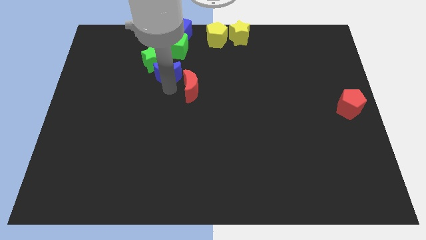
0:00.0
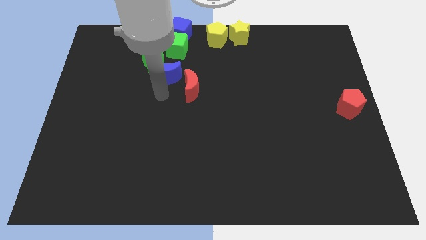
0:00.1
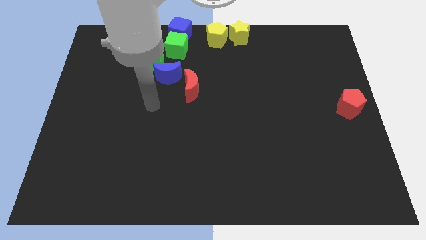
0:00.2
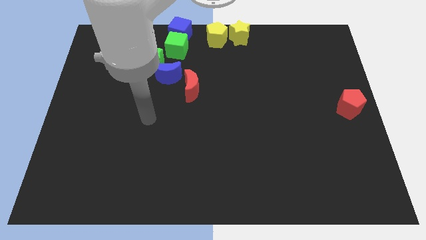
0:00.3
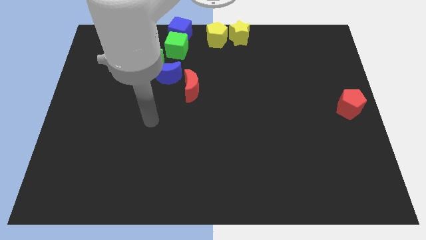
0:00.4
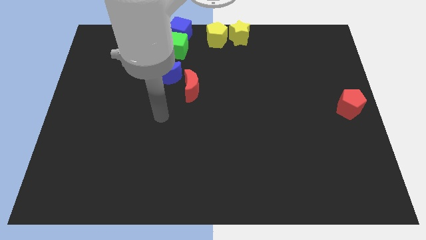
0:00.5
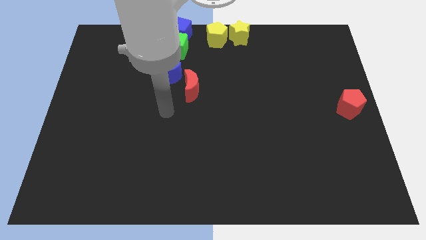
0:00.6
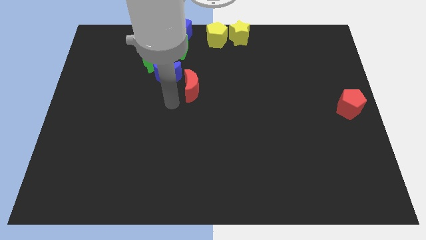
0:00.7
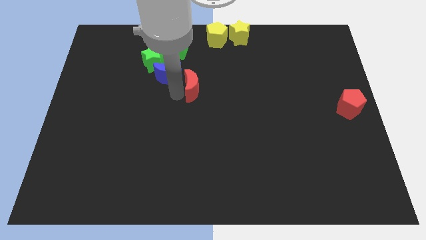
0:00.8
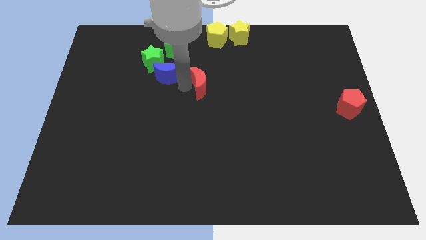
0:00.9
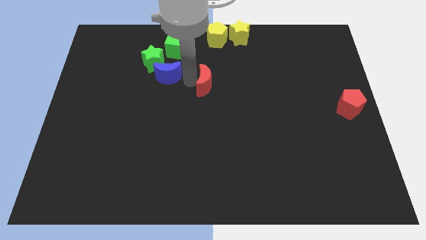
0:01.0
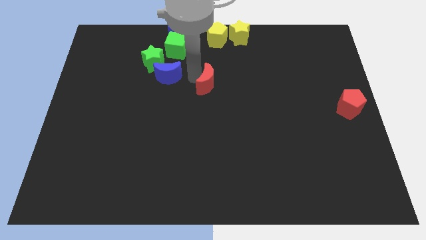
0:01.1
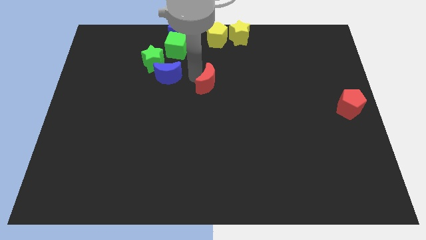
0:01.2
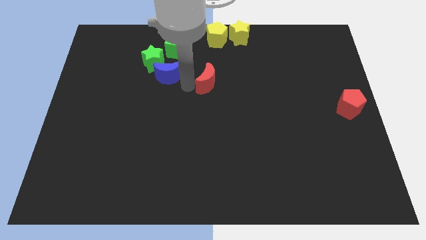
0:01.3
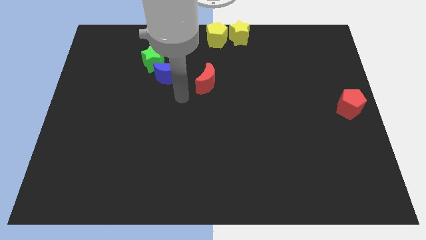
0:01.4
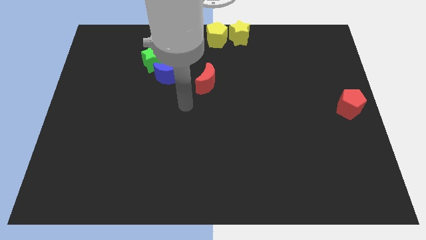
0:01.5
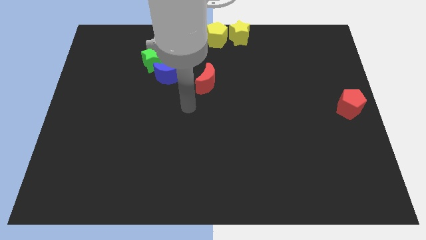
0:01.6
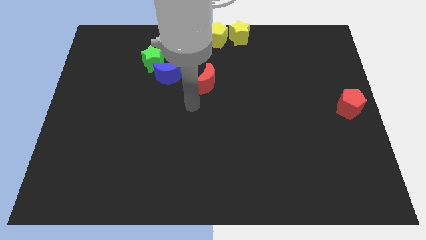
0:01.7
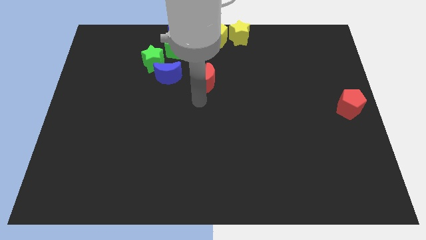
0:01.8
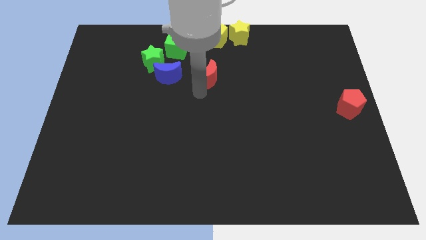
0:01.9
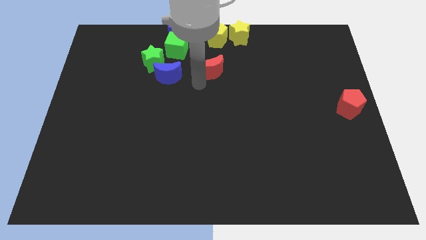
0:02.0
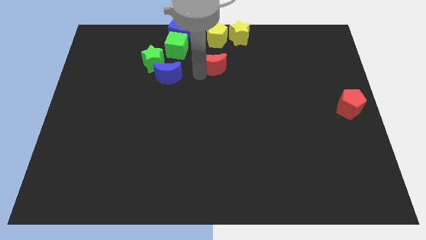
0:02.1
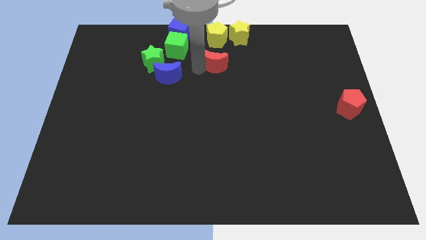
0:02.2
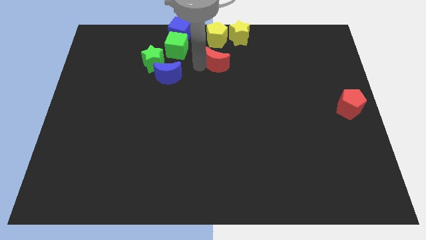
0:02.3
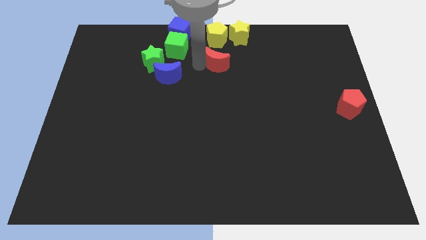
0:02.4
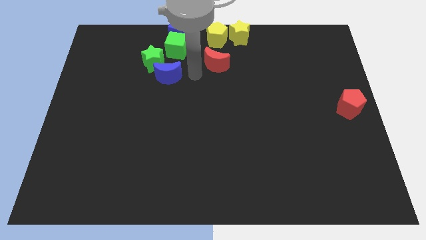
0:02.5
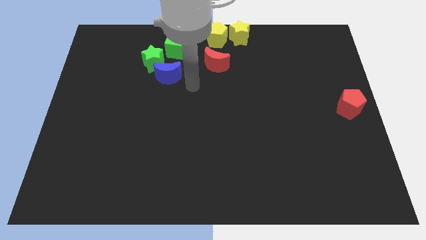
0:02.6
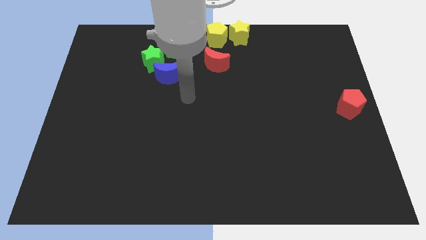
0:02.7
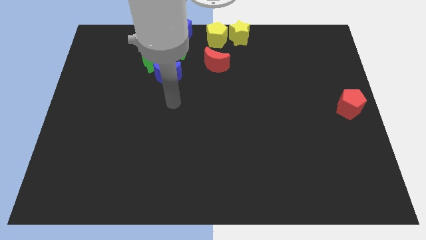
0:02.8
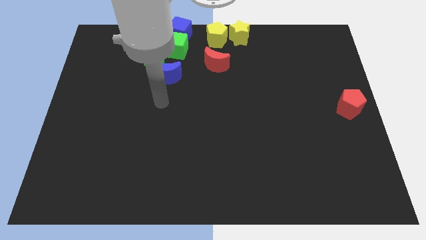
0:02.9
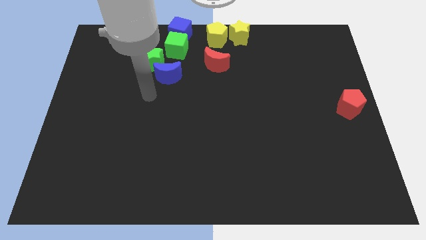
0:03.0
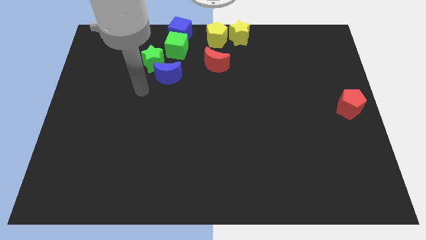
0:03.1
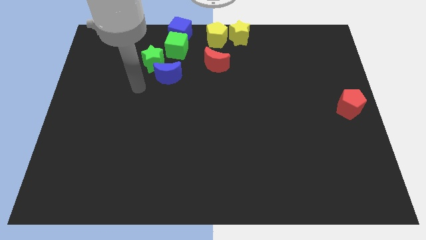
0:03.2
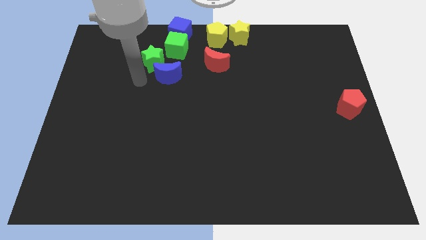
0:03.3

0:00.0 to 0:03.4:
slide the red crescent towards the top center of the board

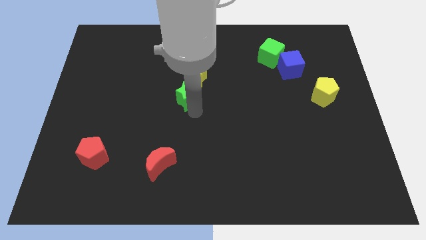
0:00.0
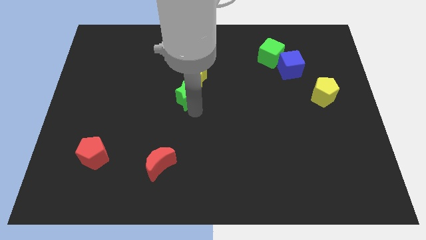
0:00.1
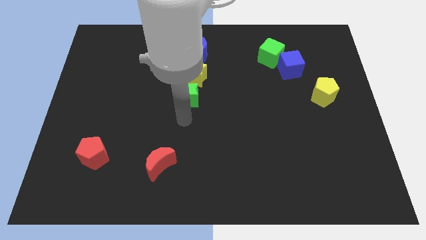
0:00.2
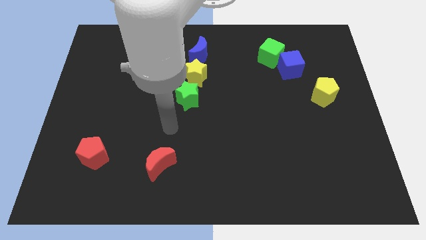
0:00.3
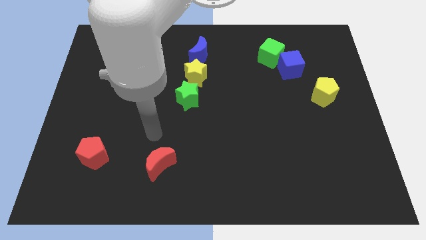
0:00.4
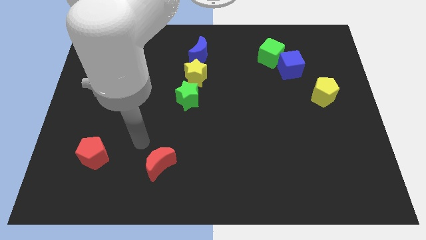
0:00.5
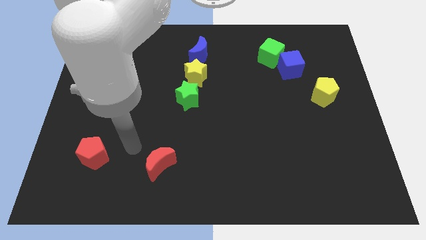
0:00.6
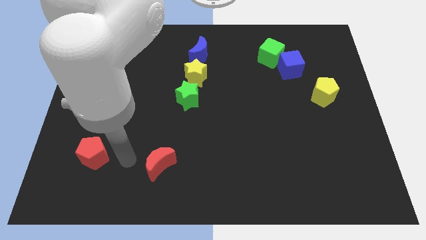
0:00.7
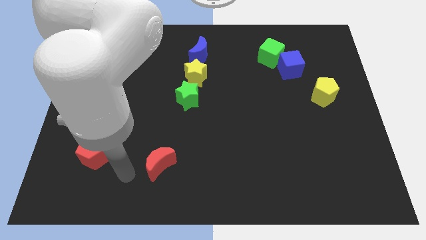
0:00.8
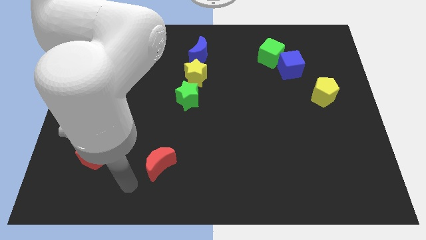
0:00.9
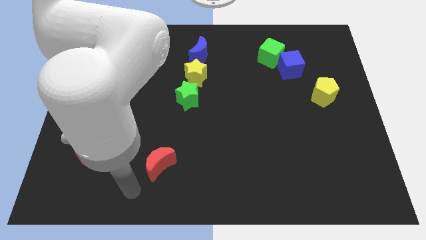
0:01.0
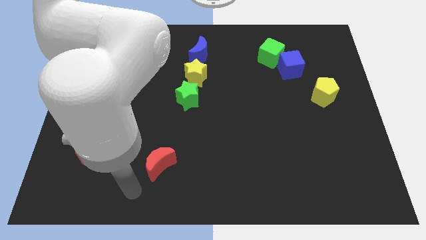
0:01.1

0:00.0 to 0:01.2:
move your hand away from green star

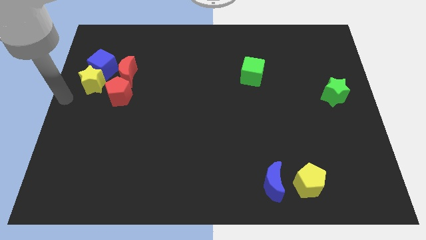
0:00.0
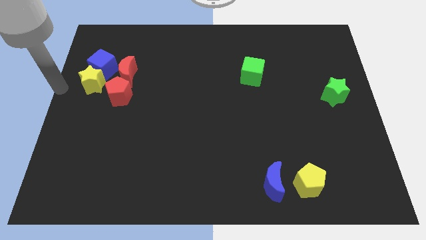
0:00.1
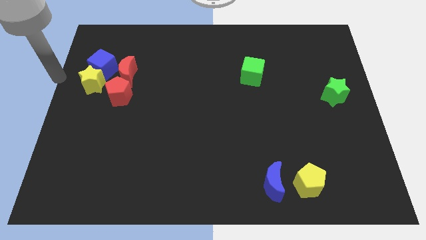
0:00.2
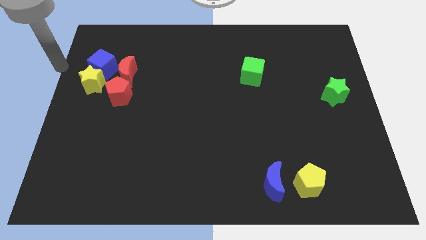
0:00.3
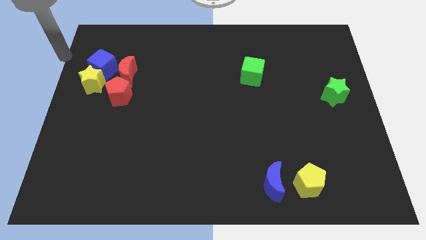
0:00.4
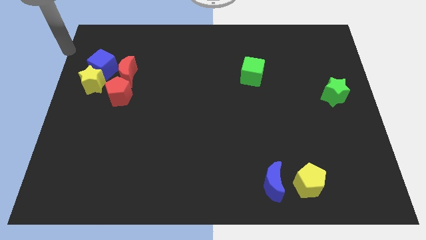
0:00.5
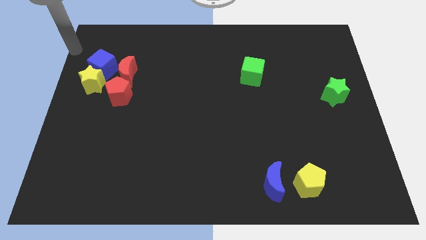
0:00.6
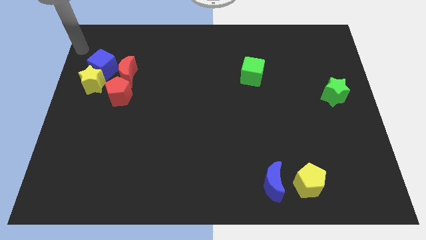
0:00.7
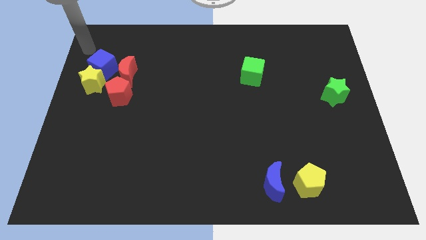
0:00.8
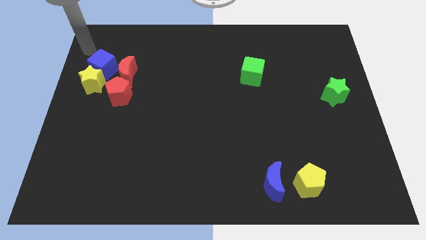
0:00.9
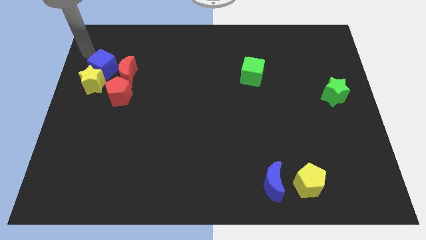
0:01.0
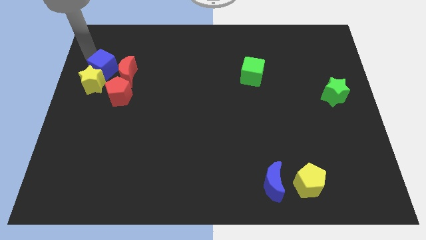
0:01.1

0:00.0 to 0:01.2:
place the arm near the blue cube

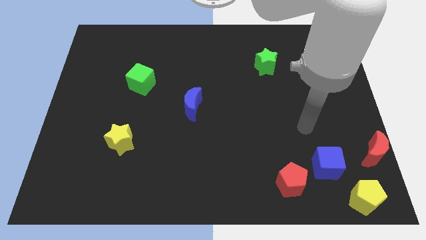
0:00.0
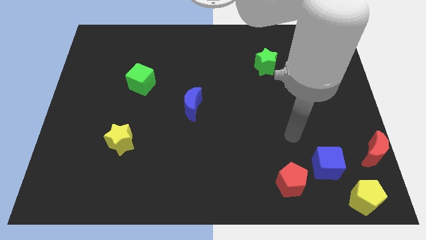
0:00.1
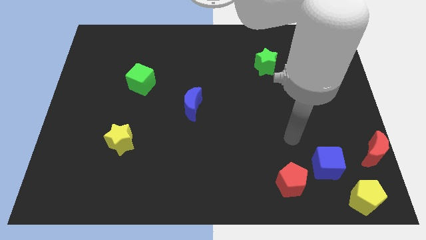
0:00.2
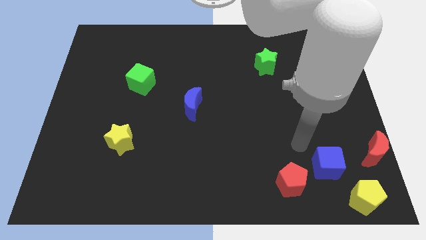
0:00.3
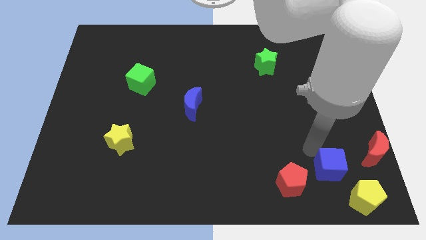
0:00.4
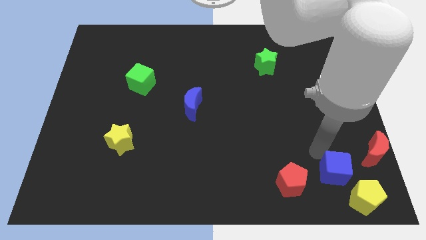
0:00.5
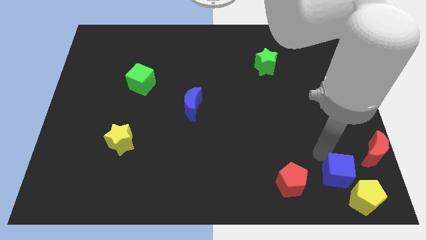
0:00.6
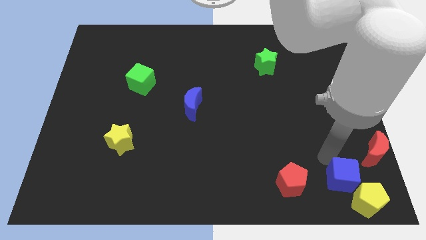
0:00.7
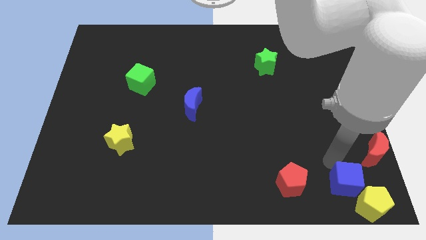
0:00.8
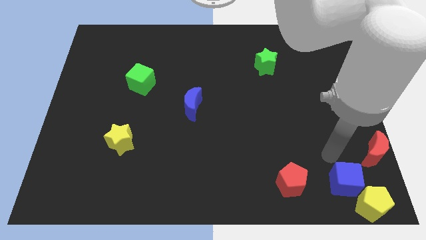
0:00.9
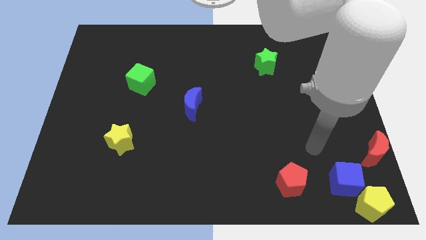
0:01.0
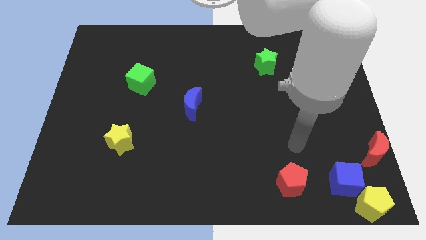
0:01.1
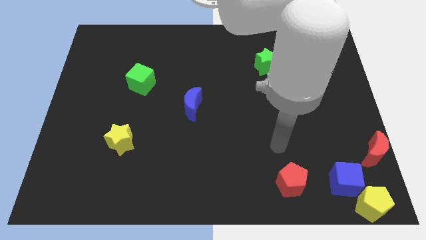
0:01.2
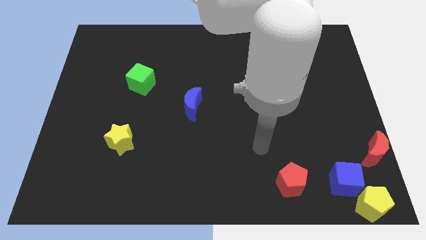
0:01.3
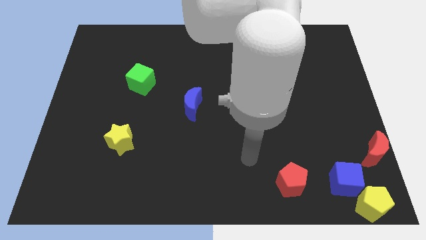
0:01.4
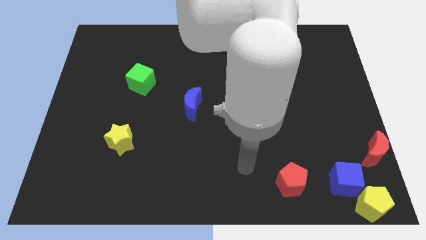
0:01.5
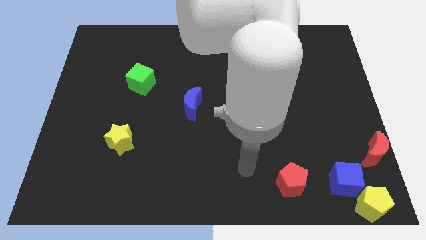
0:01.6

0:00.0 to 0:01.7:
push the blue cube down

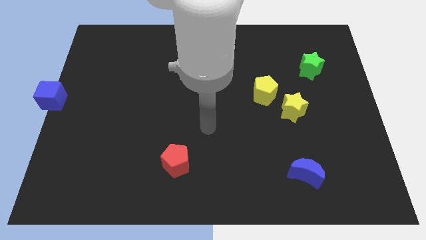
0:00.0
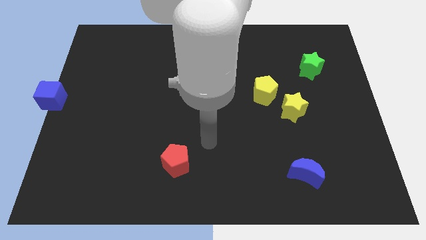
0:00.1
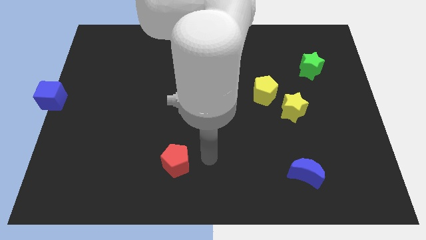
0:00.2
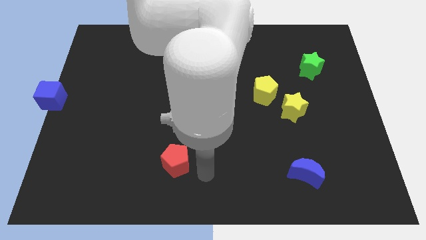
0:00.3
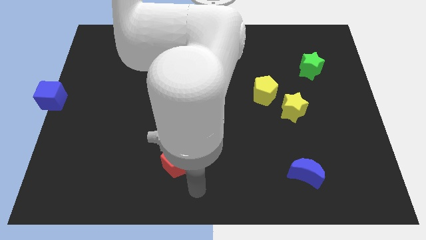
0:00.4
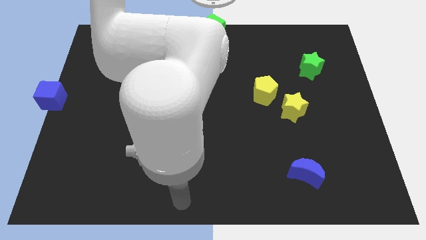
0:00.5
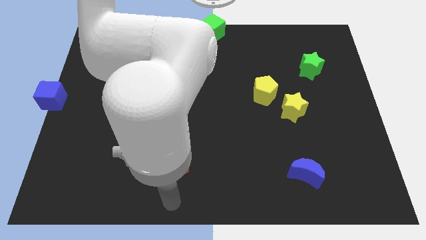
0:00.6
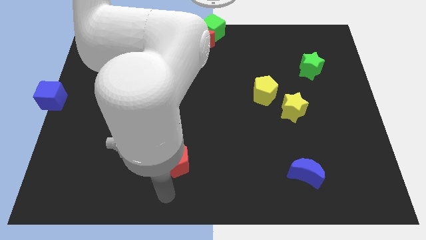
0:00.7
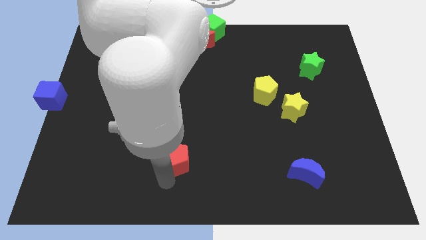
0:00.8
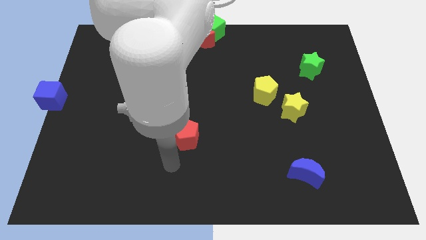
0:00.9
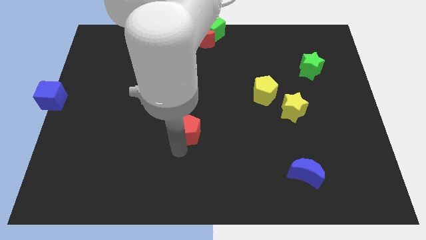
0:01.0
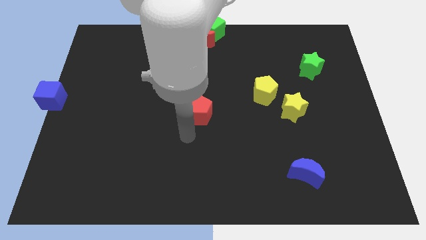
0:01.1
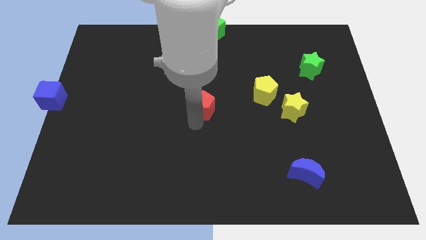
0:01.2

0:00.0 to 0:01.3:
push the red pentagon to the center of the board

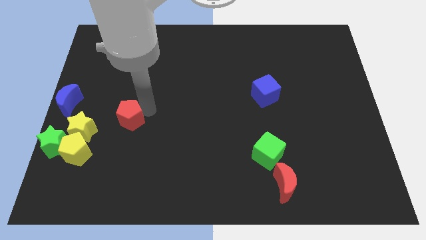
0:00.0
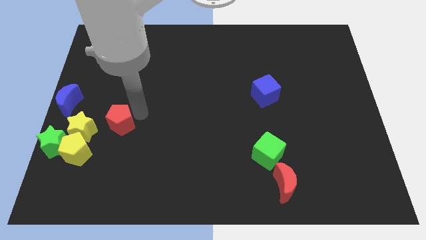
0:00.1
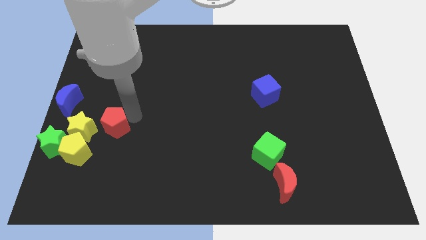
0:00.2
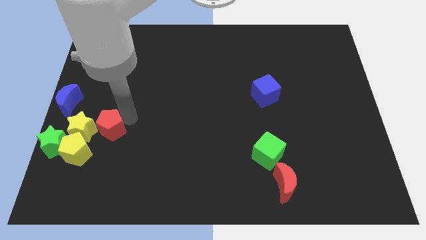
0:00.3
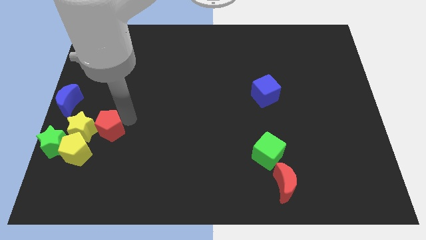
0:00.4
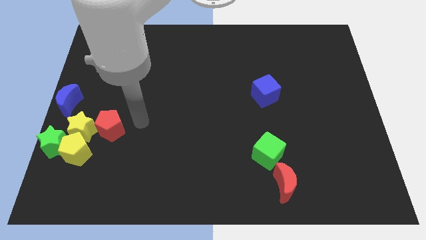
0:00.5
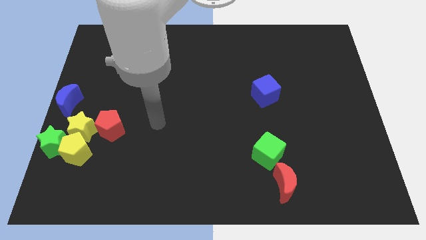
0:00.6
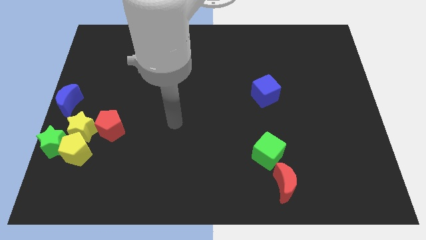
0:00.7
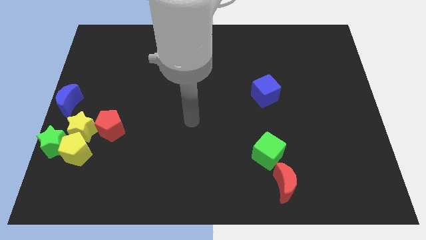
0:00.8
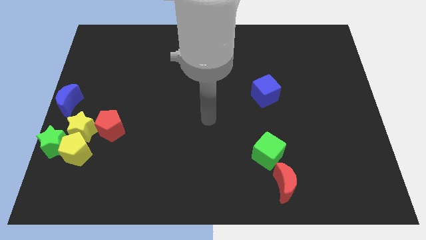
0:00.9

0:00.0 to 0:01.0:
push the red pentagon top right to yellow star
